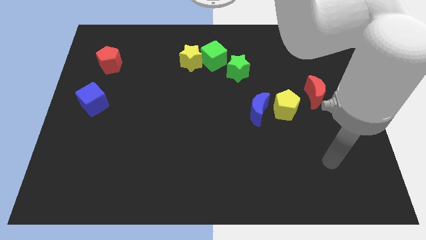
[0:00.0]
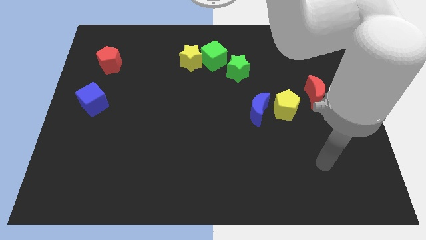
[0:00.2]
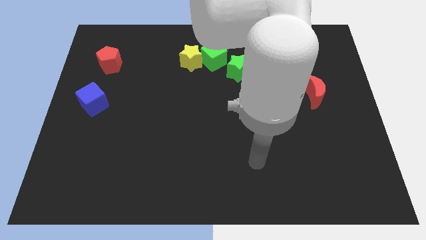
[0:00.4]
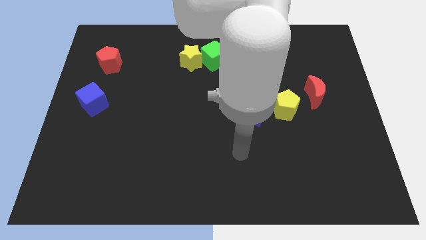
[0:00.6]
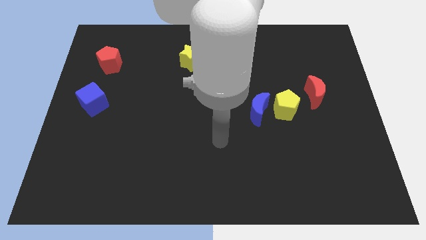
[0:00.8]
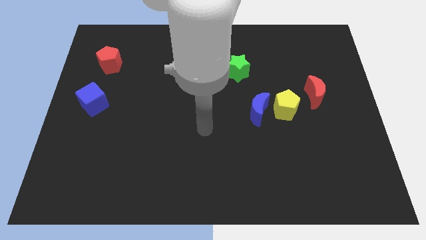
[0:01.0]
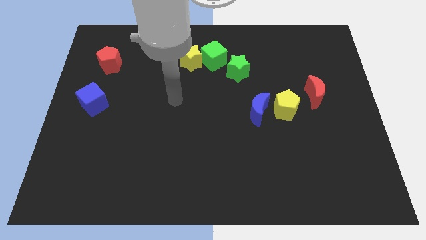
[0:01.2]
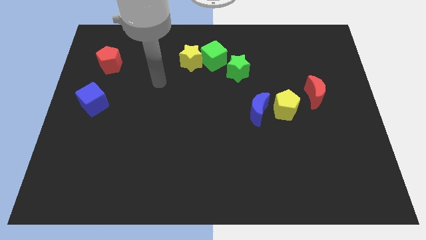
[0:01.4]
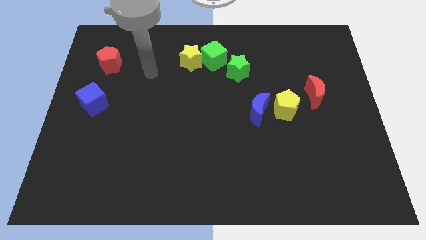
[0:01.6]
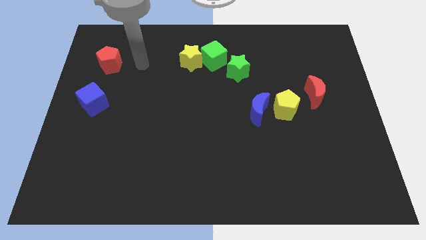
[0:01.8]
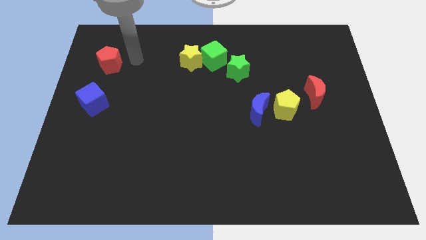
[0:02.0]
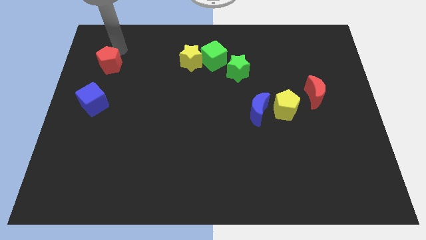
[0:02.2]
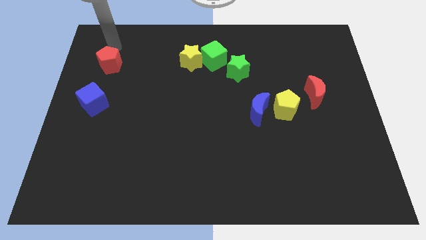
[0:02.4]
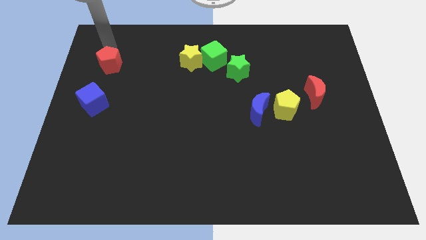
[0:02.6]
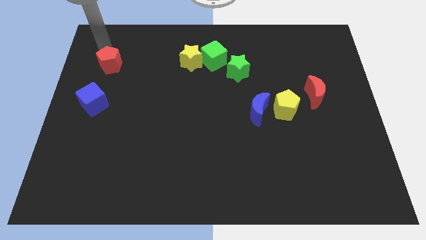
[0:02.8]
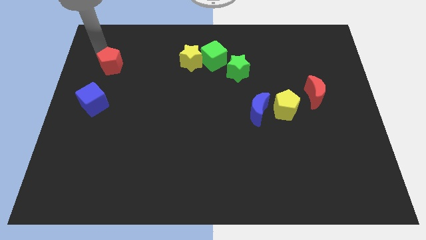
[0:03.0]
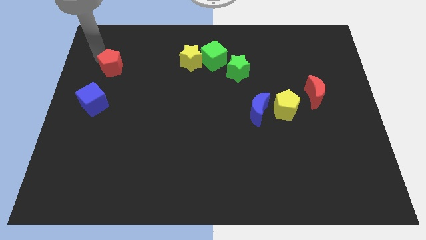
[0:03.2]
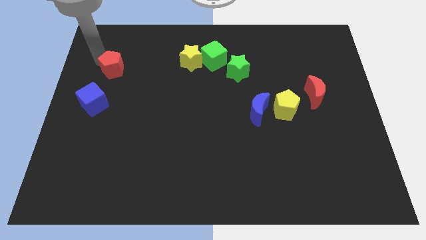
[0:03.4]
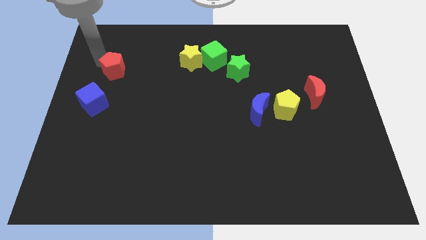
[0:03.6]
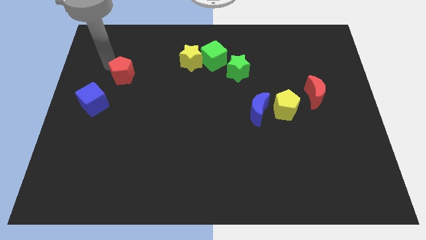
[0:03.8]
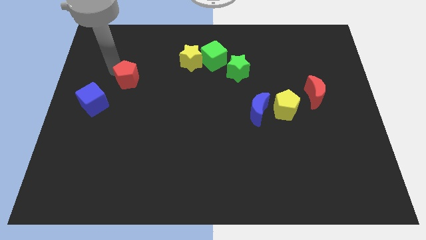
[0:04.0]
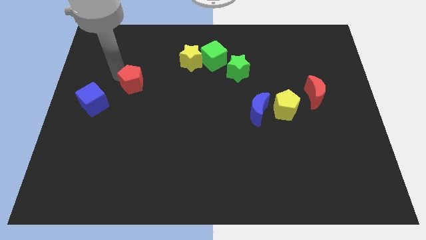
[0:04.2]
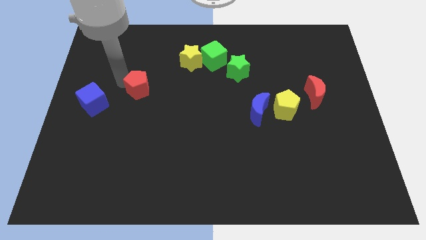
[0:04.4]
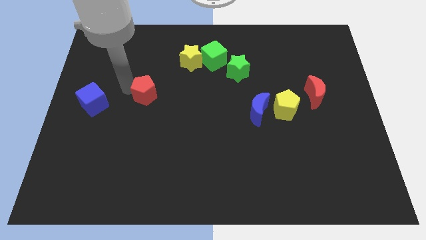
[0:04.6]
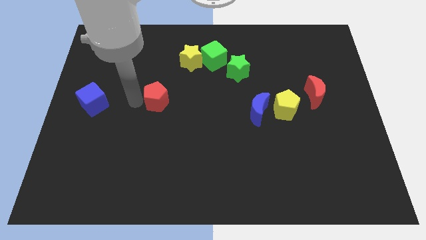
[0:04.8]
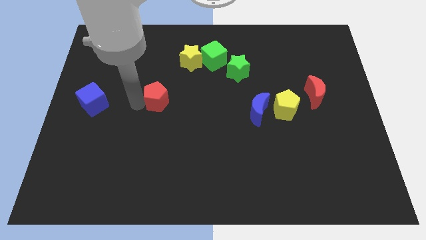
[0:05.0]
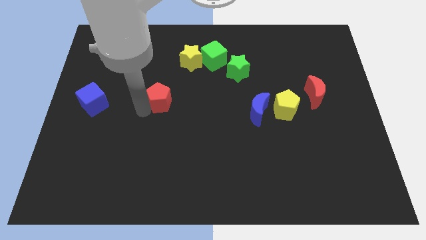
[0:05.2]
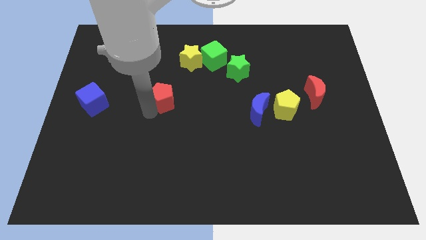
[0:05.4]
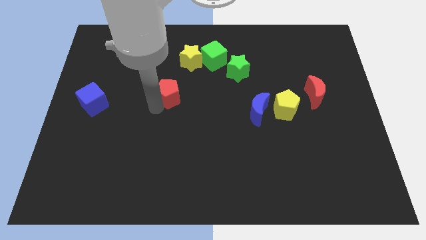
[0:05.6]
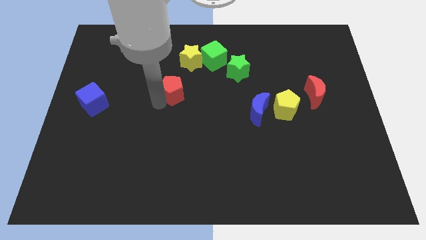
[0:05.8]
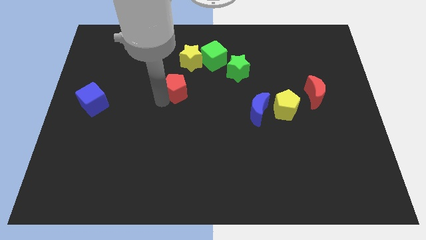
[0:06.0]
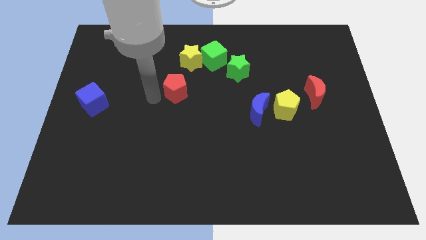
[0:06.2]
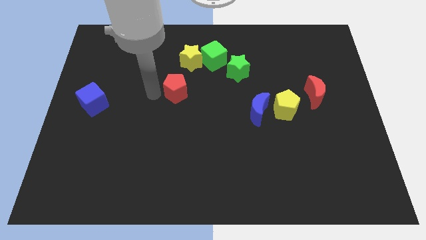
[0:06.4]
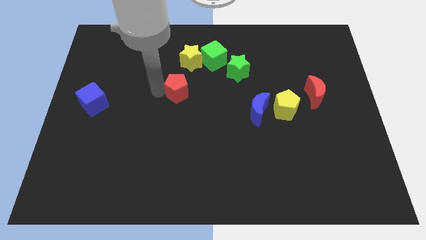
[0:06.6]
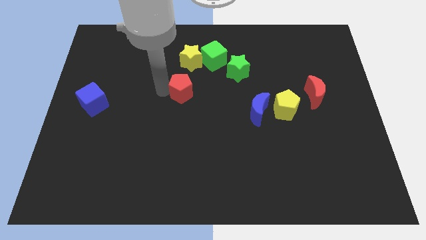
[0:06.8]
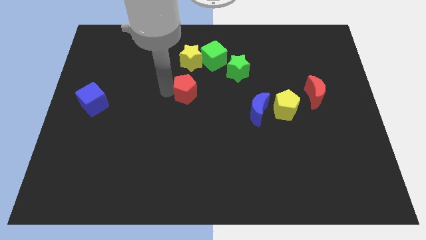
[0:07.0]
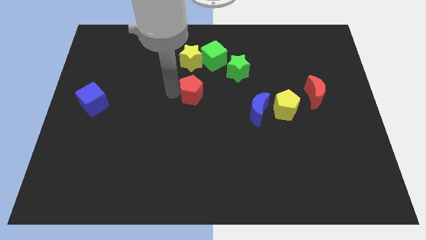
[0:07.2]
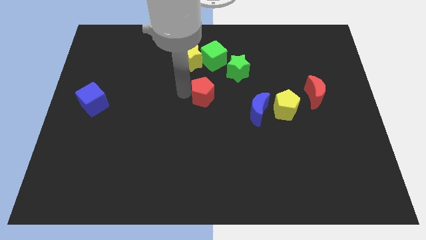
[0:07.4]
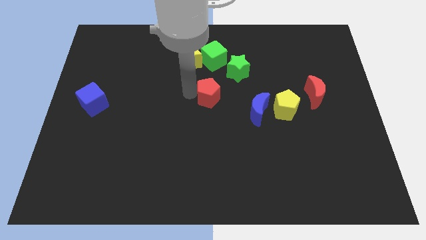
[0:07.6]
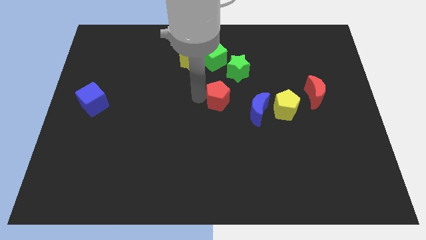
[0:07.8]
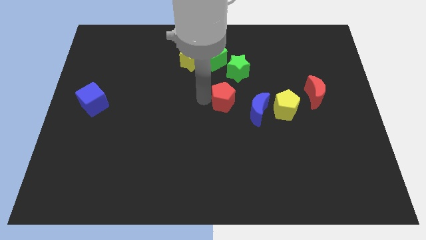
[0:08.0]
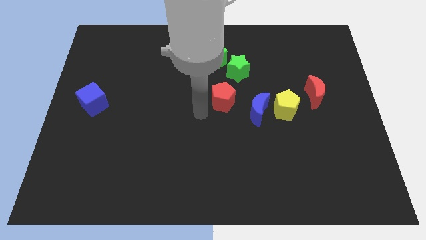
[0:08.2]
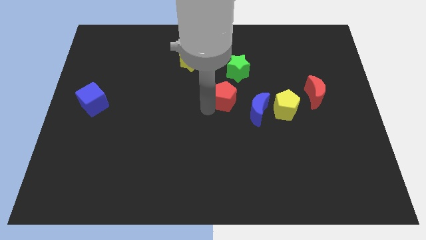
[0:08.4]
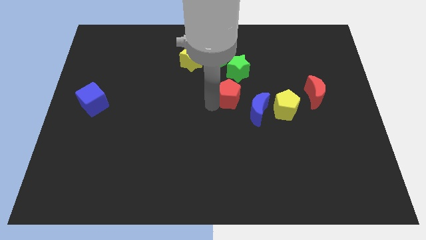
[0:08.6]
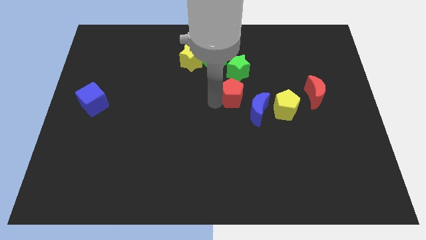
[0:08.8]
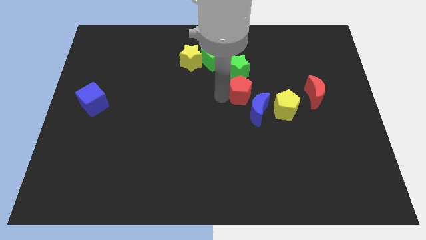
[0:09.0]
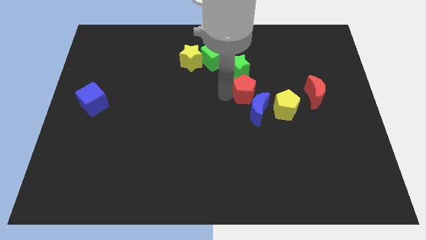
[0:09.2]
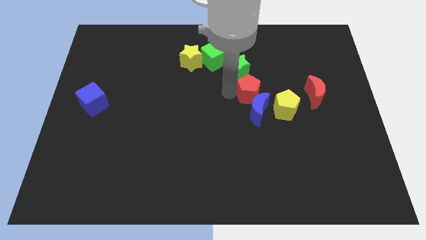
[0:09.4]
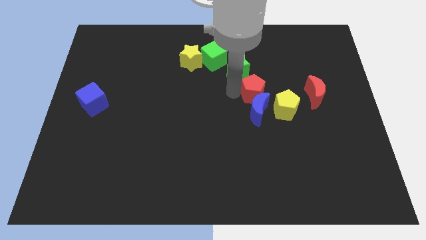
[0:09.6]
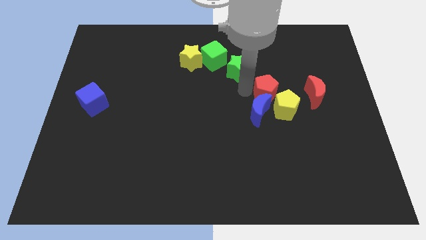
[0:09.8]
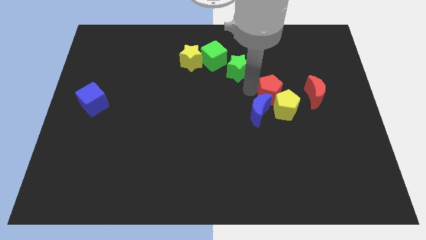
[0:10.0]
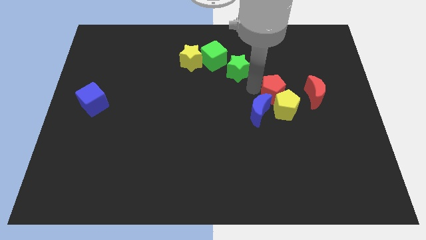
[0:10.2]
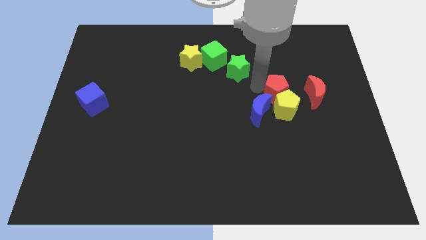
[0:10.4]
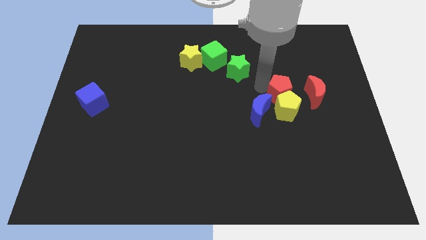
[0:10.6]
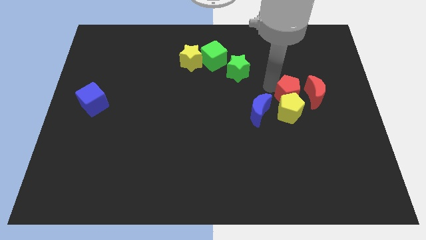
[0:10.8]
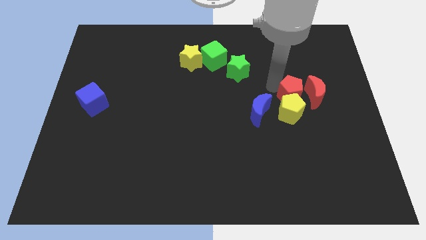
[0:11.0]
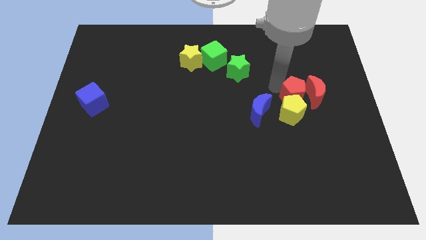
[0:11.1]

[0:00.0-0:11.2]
push the red pentagon towards the red moon

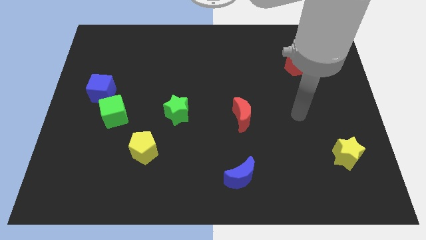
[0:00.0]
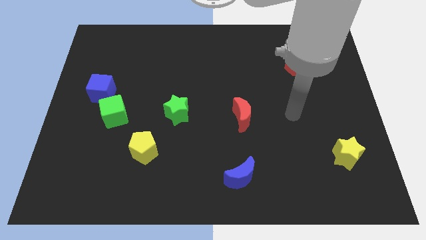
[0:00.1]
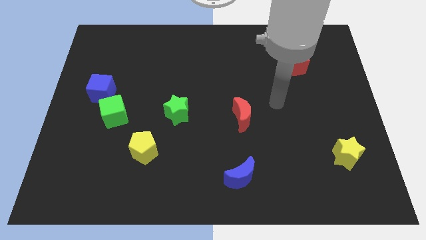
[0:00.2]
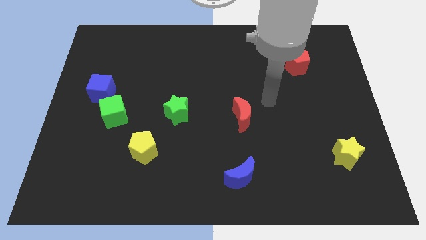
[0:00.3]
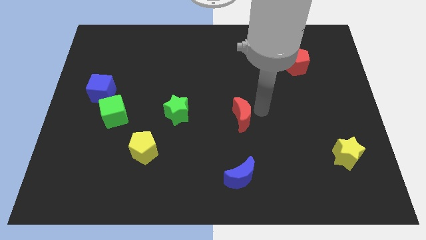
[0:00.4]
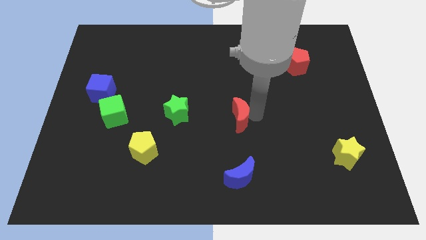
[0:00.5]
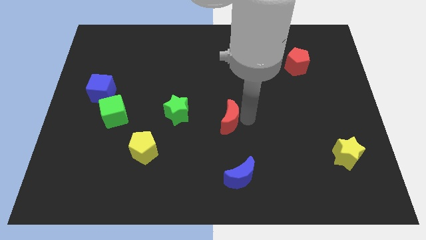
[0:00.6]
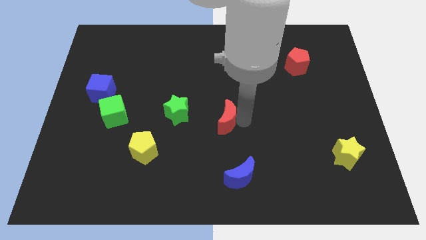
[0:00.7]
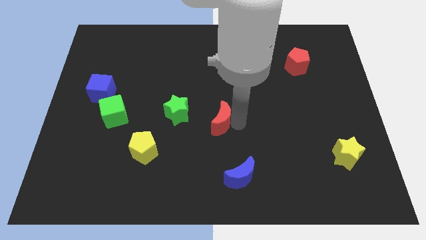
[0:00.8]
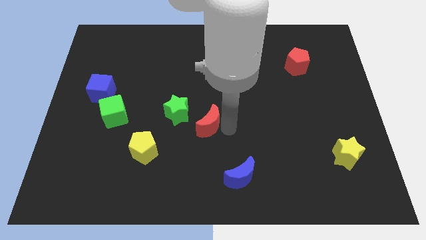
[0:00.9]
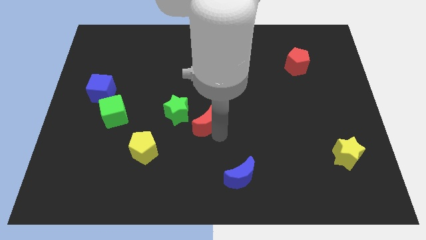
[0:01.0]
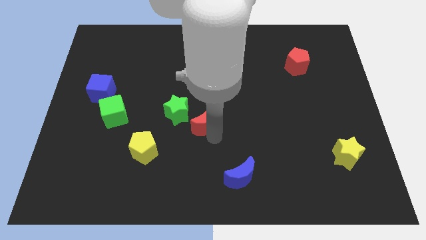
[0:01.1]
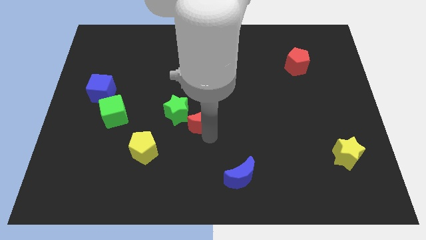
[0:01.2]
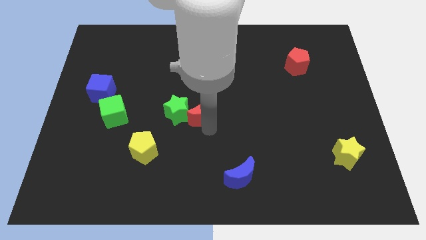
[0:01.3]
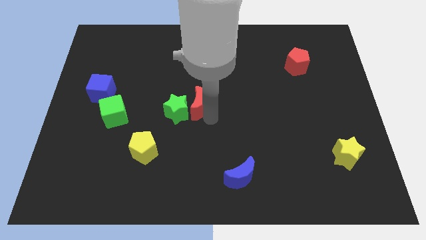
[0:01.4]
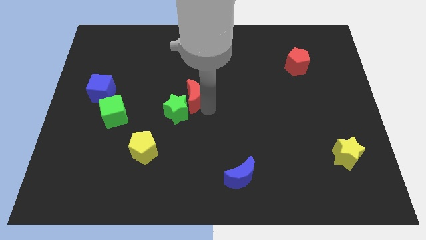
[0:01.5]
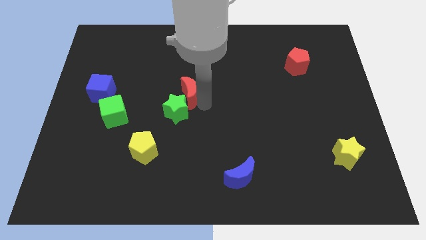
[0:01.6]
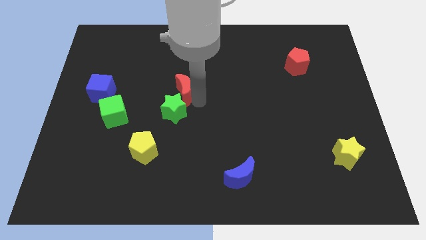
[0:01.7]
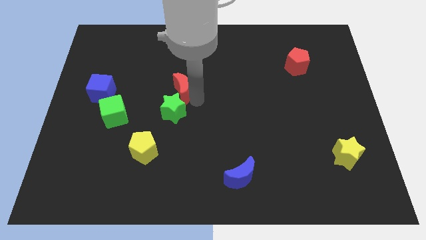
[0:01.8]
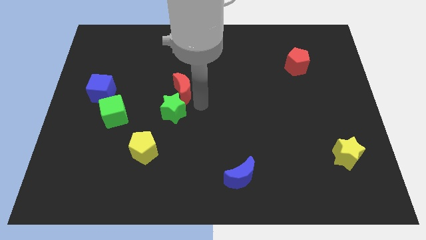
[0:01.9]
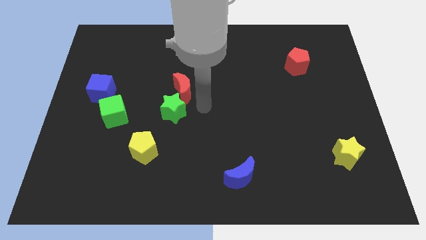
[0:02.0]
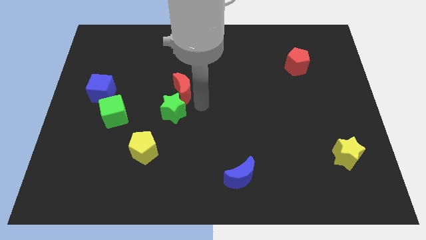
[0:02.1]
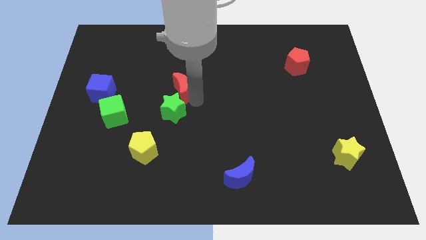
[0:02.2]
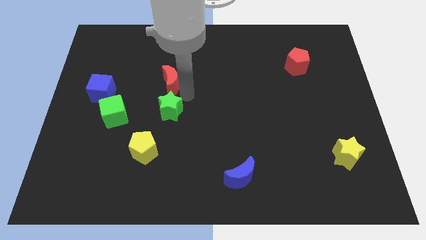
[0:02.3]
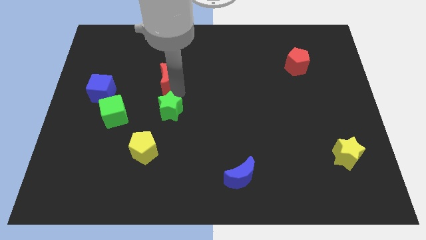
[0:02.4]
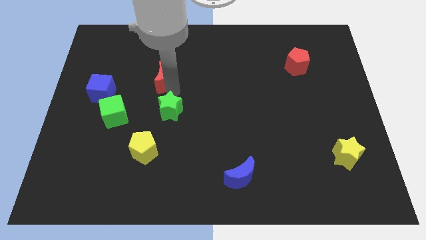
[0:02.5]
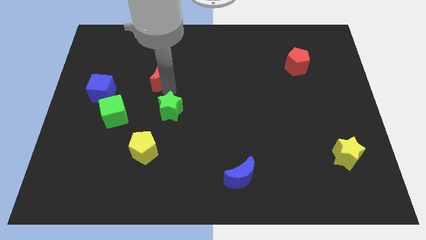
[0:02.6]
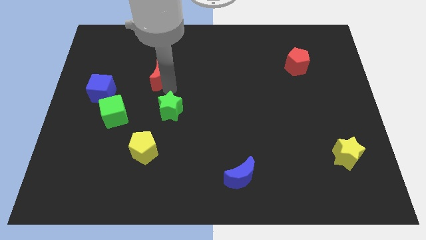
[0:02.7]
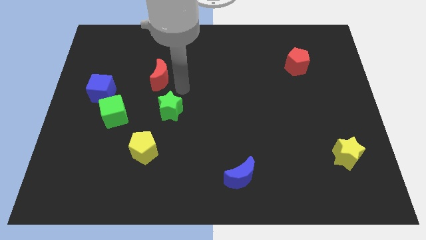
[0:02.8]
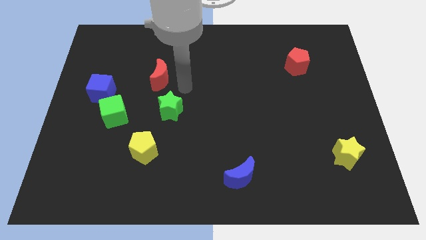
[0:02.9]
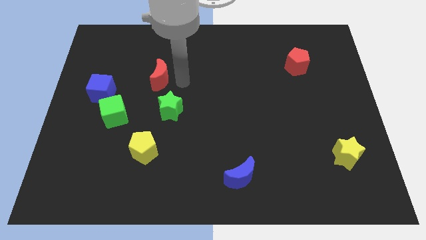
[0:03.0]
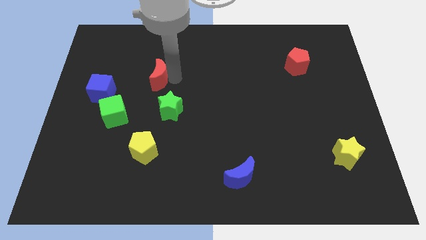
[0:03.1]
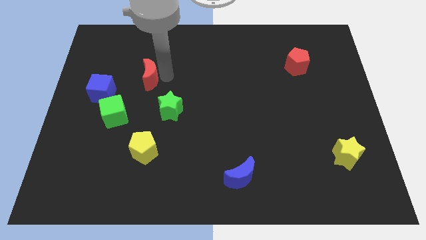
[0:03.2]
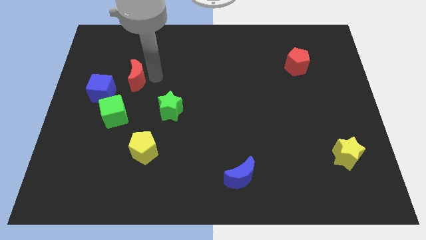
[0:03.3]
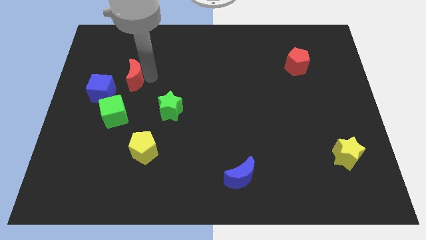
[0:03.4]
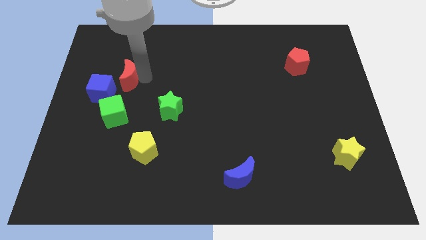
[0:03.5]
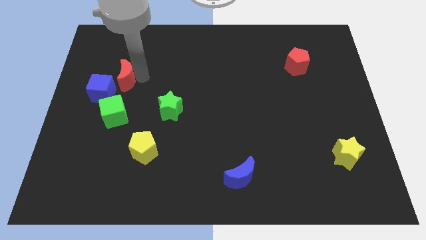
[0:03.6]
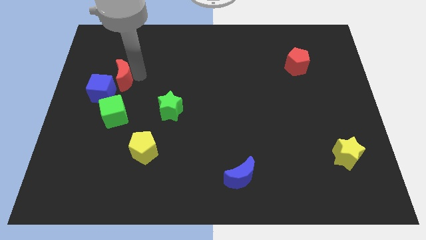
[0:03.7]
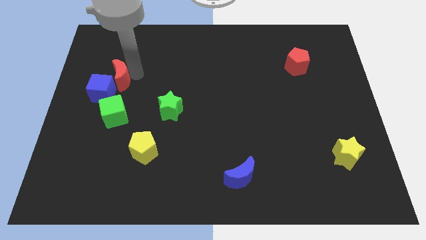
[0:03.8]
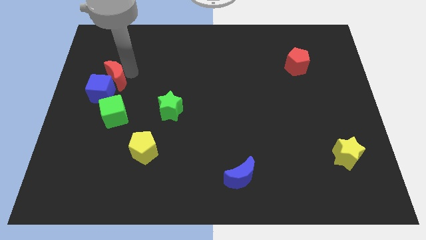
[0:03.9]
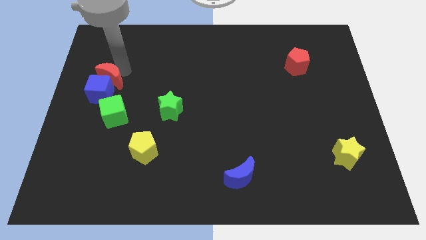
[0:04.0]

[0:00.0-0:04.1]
move the red moon to the blue cube
